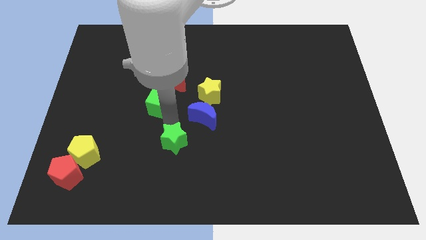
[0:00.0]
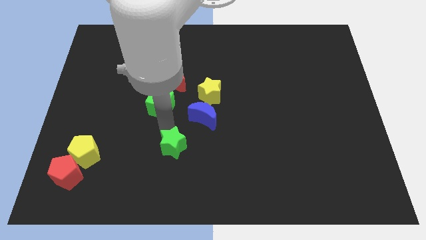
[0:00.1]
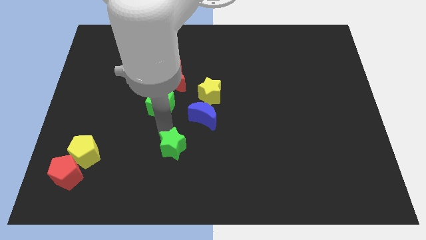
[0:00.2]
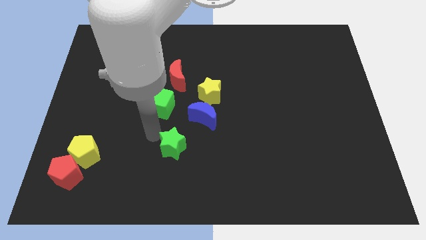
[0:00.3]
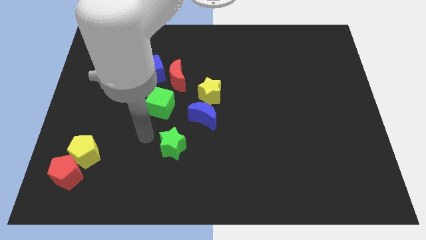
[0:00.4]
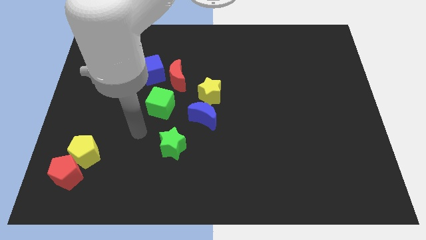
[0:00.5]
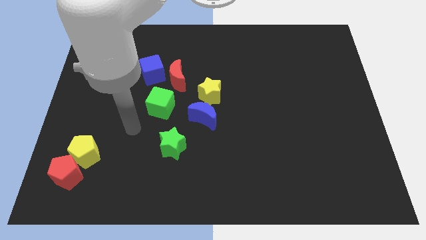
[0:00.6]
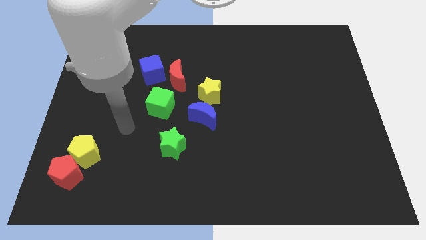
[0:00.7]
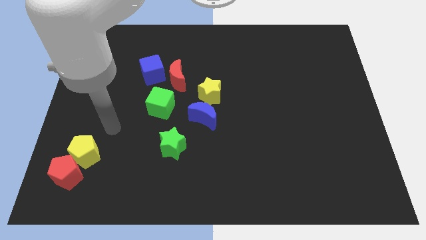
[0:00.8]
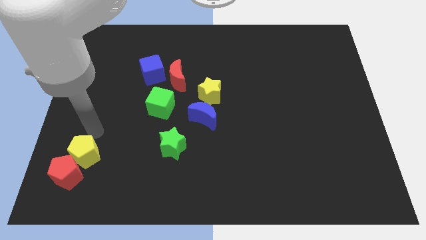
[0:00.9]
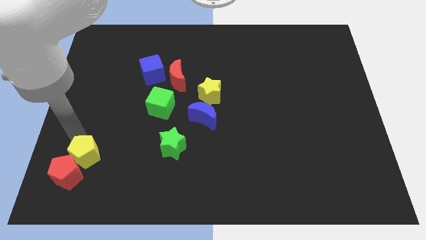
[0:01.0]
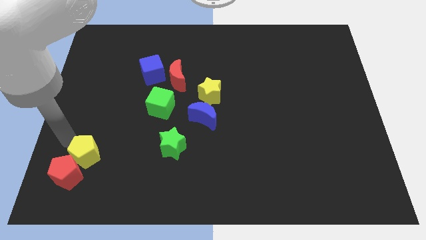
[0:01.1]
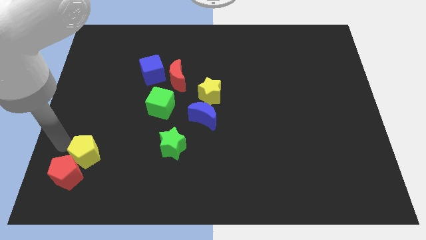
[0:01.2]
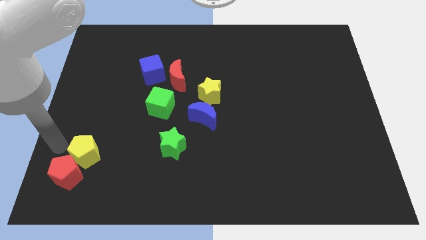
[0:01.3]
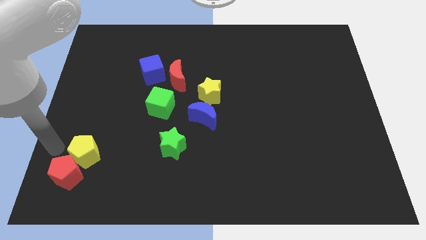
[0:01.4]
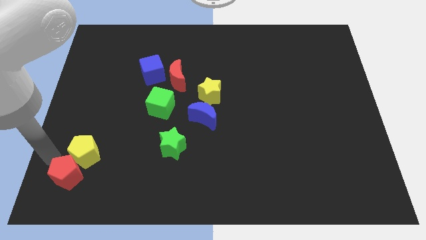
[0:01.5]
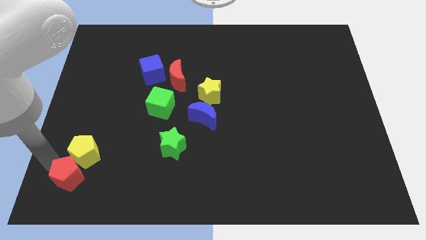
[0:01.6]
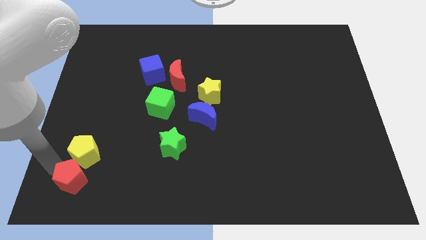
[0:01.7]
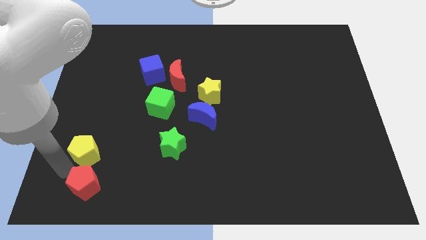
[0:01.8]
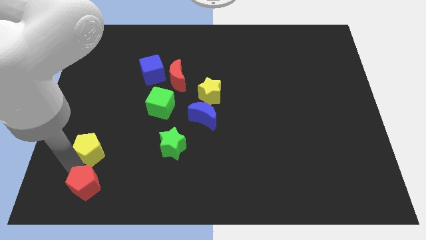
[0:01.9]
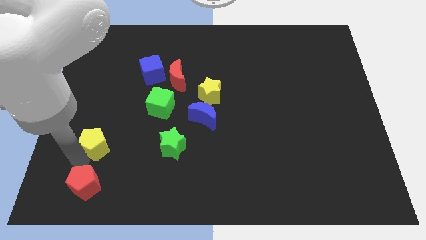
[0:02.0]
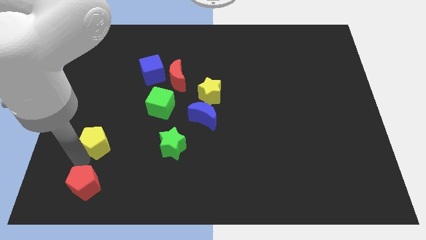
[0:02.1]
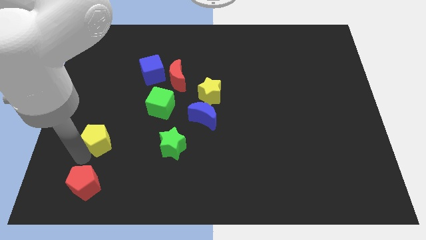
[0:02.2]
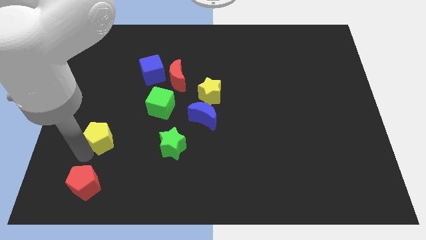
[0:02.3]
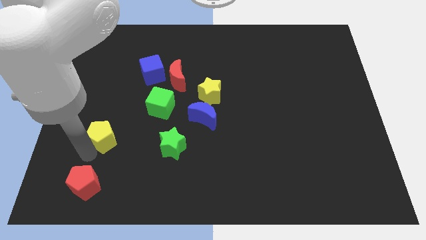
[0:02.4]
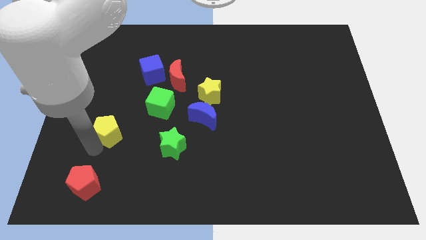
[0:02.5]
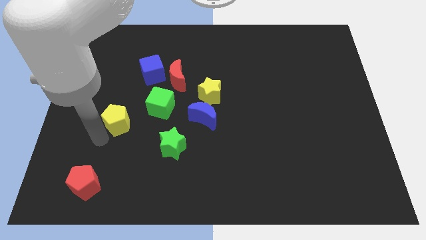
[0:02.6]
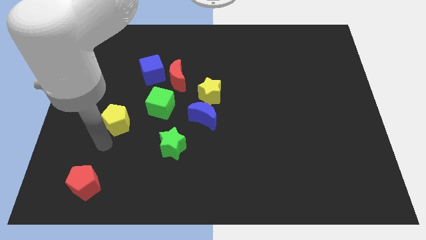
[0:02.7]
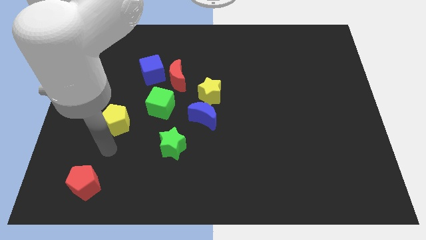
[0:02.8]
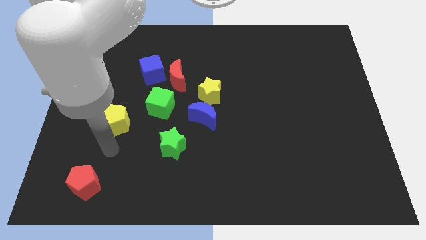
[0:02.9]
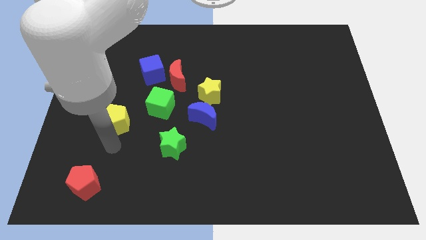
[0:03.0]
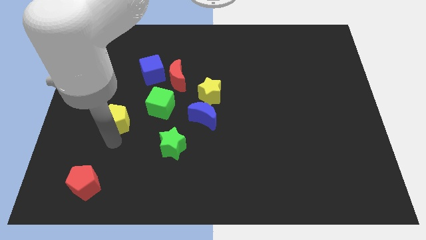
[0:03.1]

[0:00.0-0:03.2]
move yellow pentagon slightly upwards

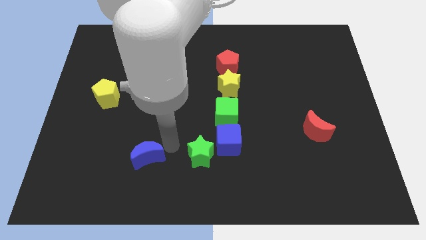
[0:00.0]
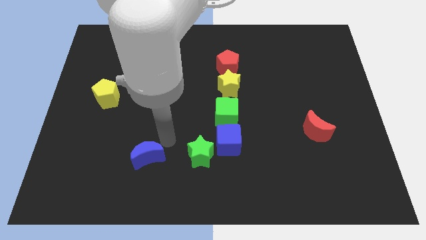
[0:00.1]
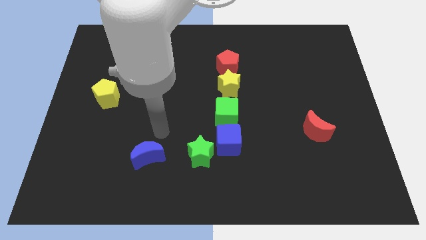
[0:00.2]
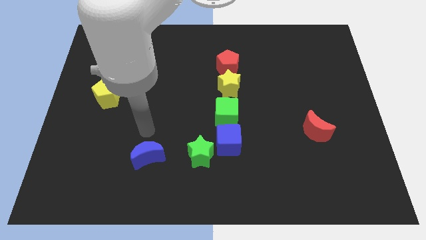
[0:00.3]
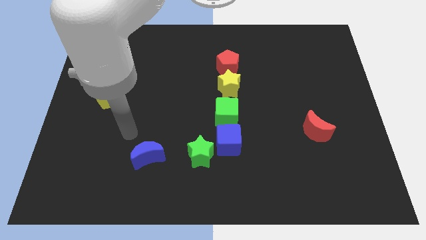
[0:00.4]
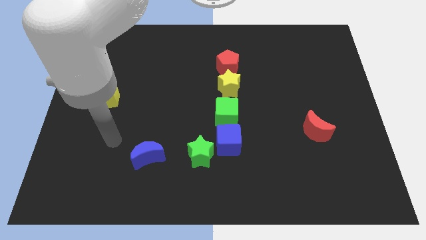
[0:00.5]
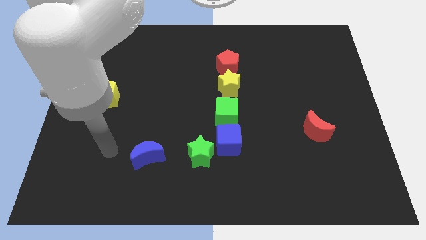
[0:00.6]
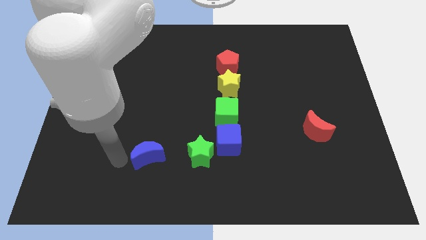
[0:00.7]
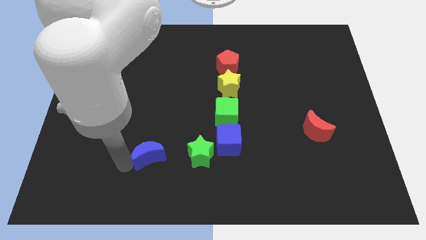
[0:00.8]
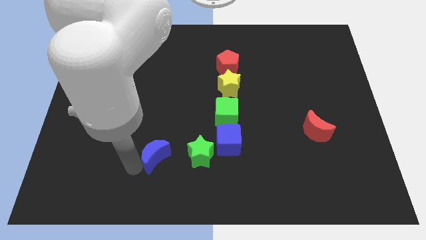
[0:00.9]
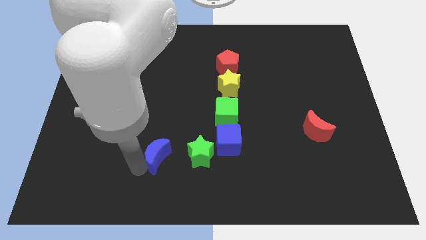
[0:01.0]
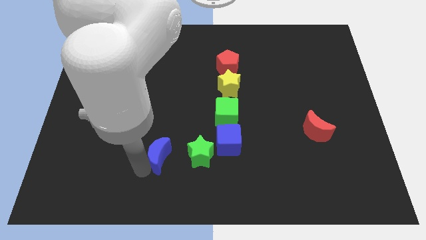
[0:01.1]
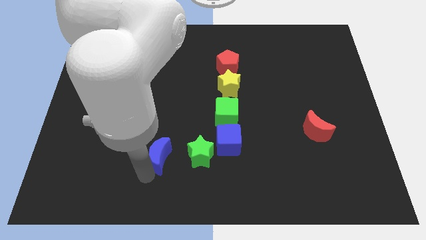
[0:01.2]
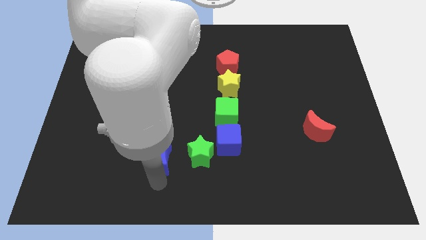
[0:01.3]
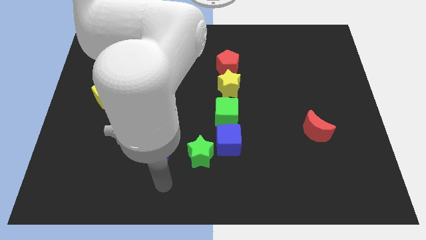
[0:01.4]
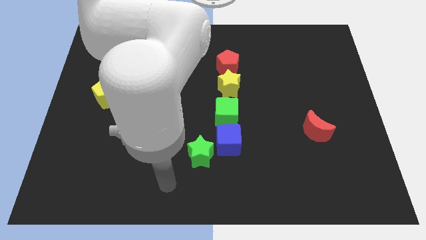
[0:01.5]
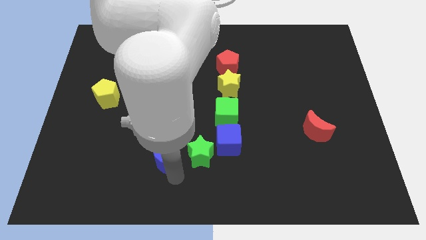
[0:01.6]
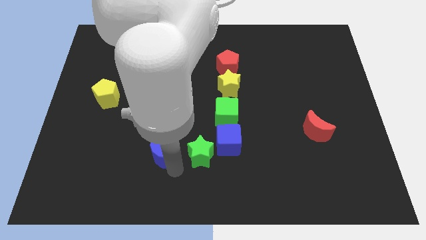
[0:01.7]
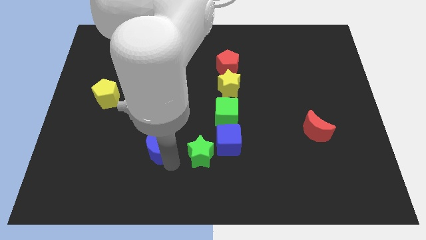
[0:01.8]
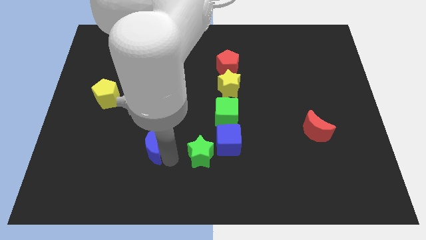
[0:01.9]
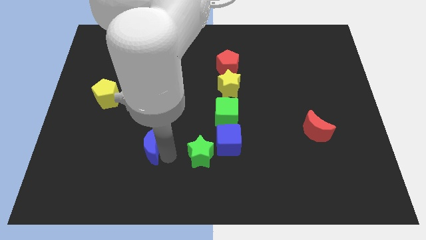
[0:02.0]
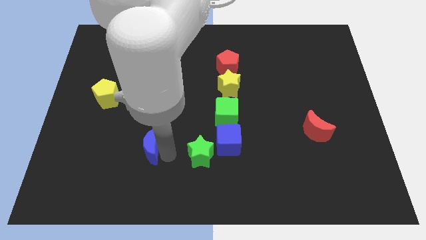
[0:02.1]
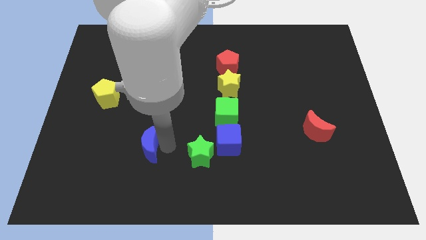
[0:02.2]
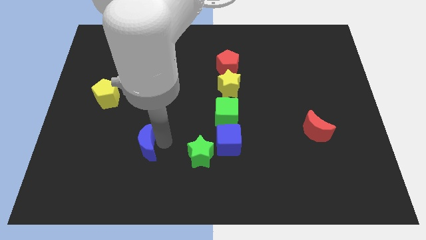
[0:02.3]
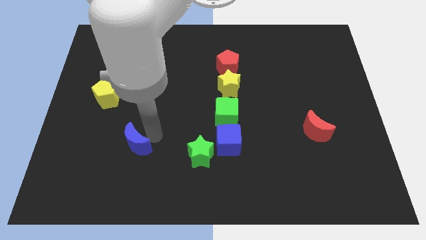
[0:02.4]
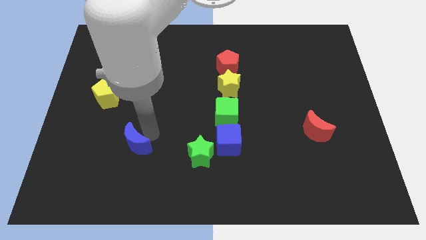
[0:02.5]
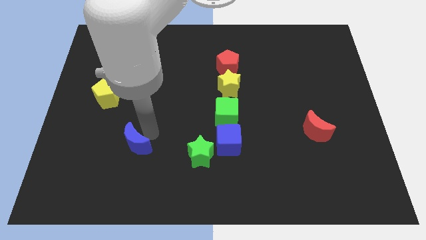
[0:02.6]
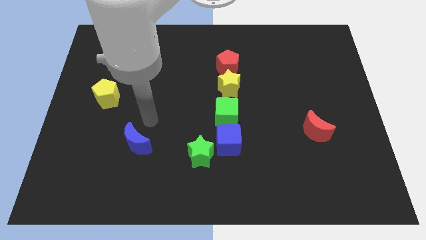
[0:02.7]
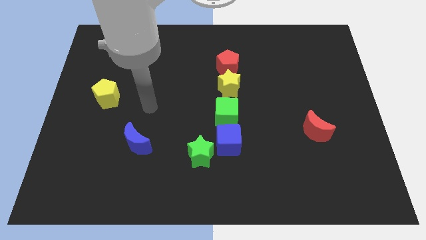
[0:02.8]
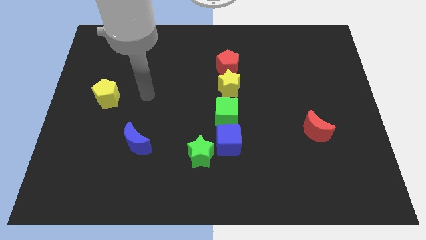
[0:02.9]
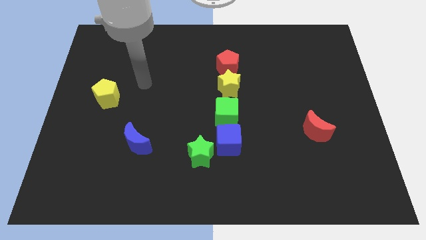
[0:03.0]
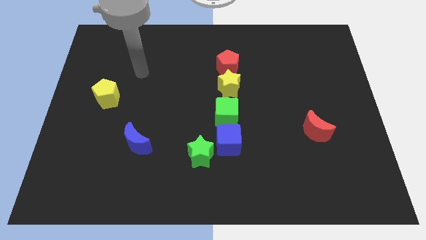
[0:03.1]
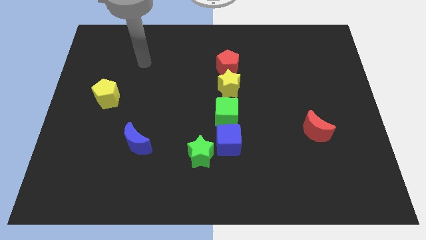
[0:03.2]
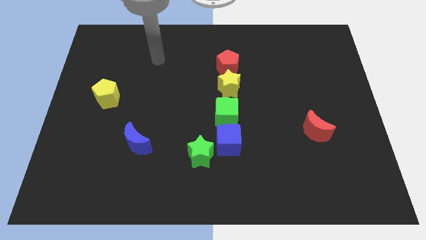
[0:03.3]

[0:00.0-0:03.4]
place blue crescent below yellow pentagon

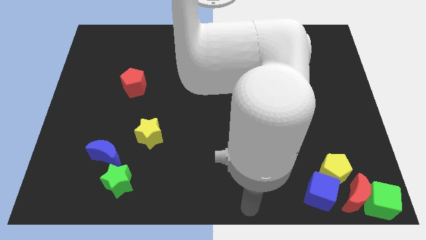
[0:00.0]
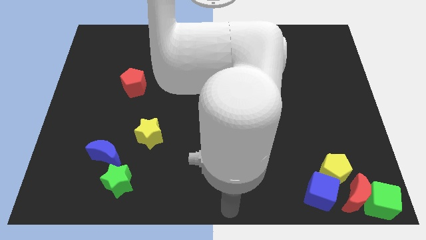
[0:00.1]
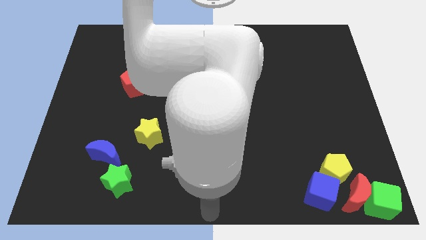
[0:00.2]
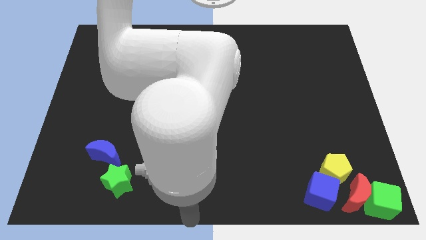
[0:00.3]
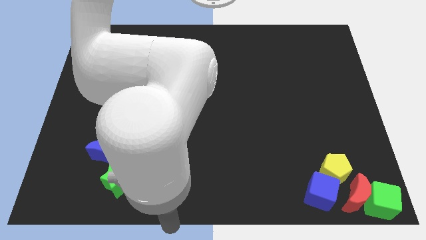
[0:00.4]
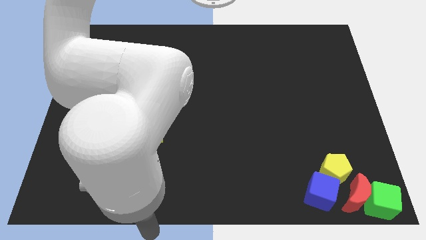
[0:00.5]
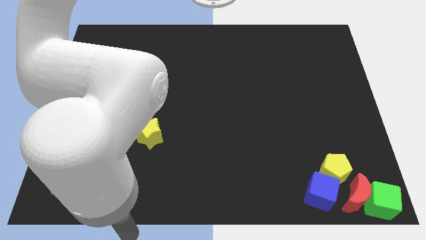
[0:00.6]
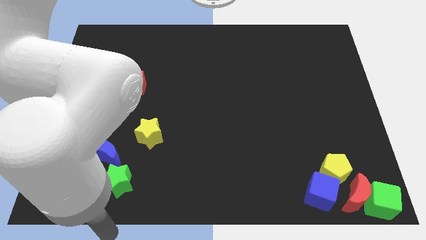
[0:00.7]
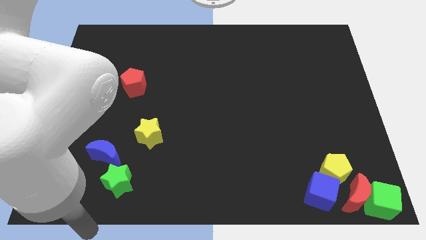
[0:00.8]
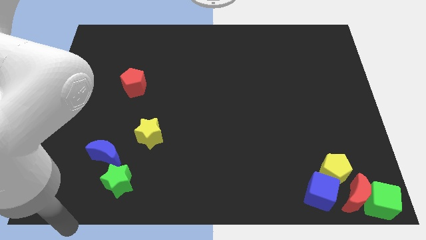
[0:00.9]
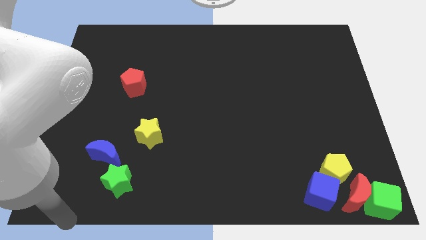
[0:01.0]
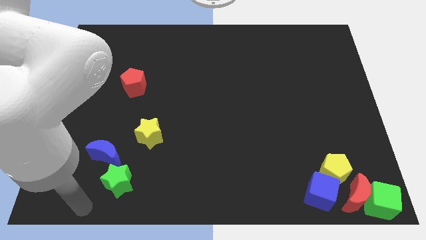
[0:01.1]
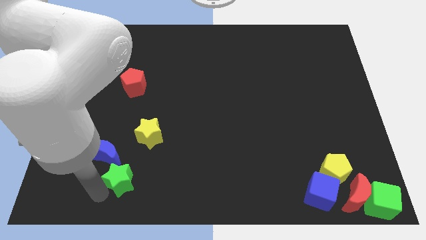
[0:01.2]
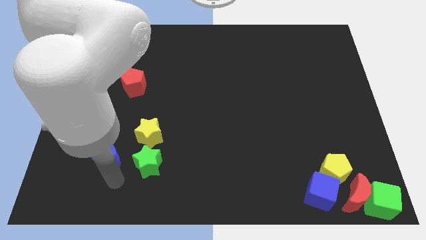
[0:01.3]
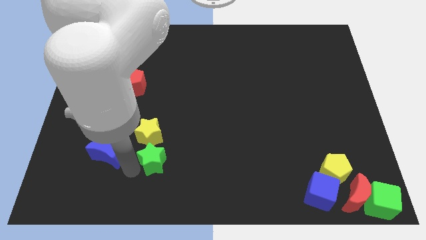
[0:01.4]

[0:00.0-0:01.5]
move the green star below the yellow star

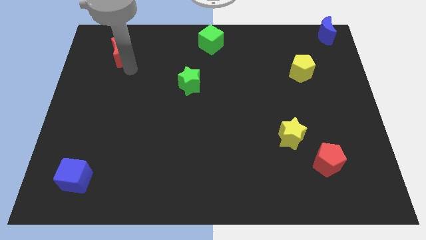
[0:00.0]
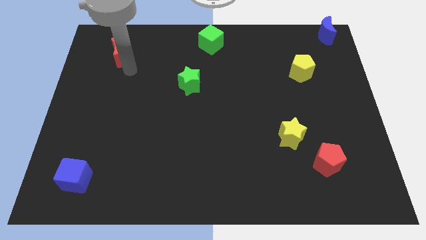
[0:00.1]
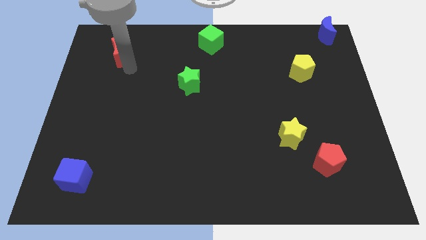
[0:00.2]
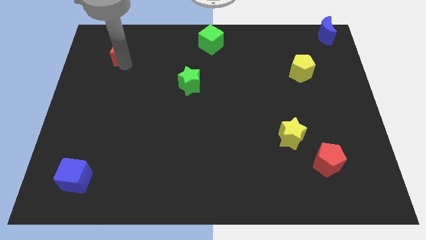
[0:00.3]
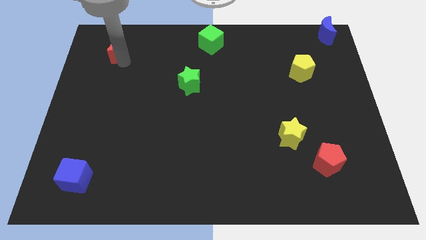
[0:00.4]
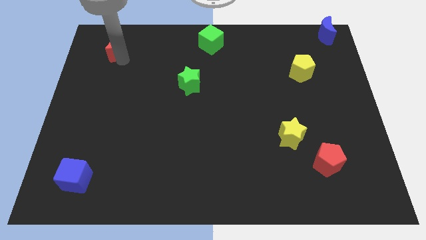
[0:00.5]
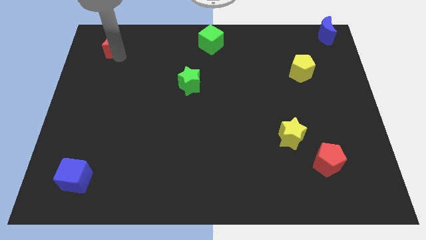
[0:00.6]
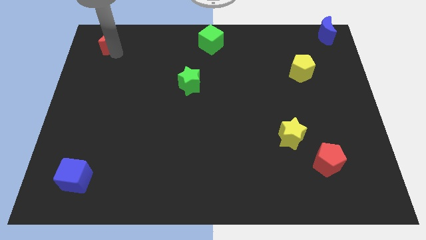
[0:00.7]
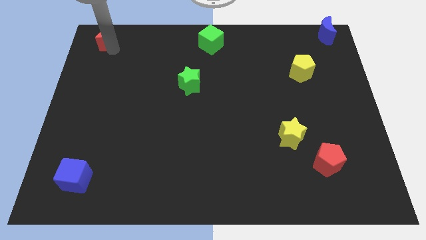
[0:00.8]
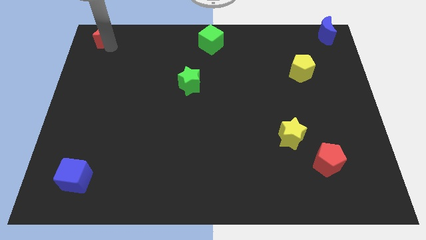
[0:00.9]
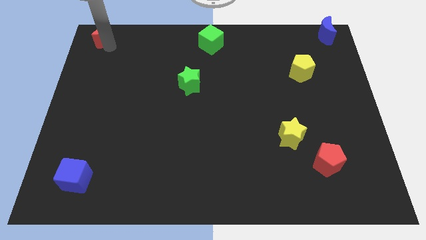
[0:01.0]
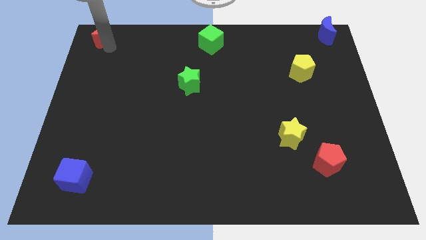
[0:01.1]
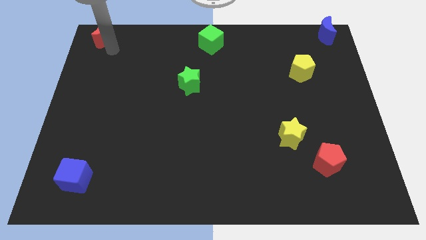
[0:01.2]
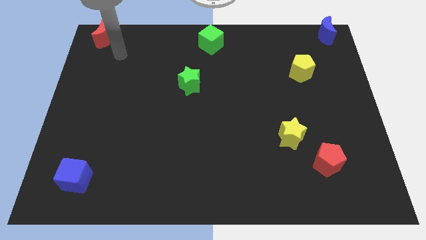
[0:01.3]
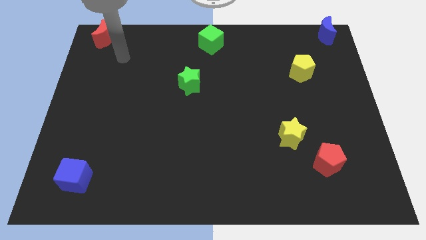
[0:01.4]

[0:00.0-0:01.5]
move the red moon to the top right corner
